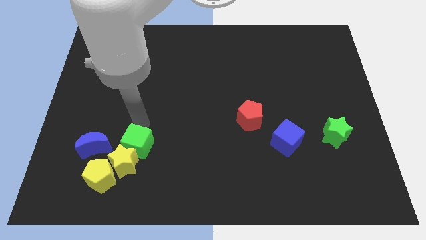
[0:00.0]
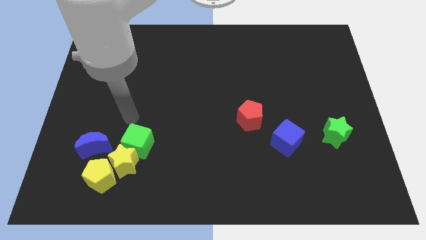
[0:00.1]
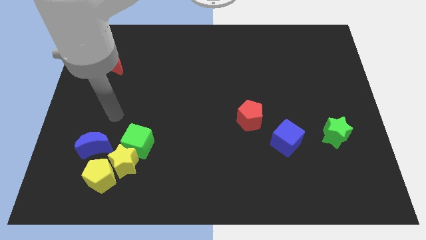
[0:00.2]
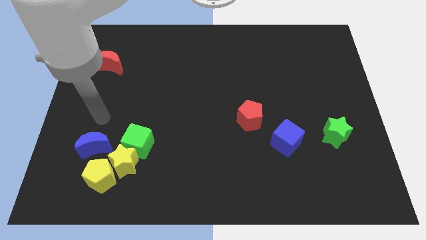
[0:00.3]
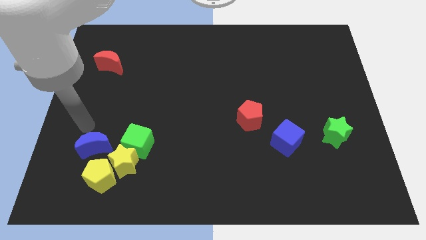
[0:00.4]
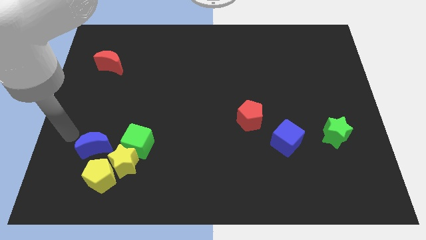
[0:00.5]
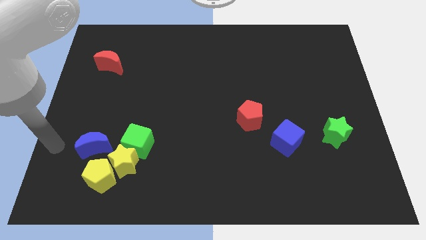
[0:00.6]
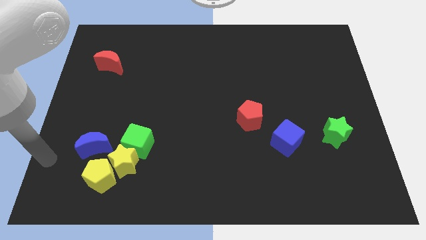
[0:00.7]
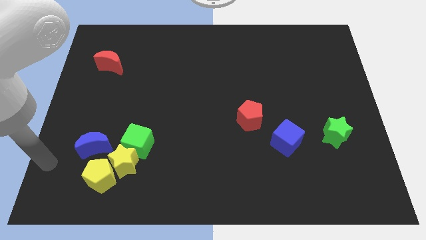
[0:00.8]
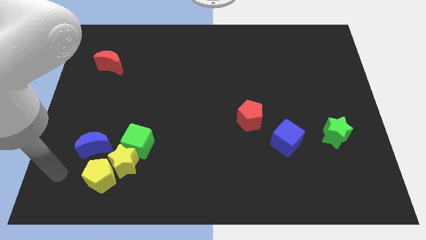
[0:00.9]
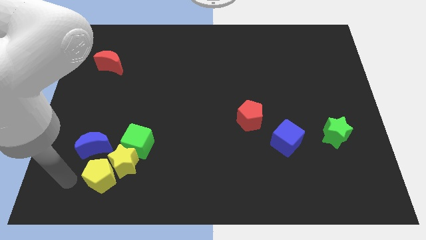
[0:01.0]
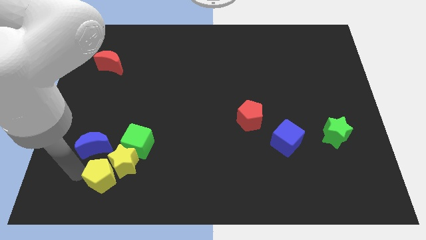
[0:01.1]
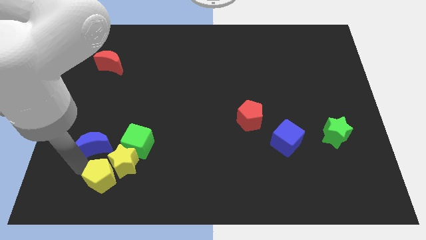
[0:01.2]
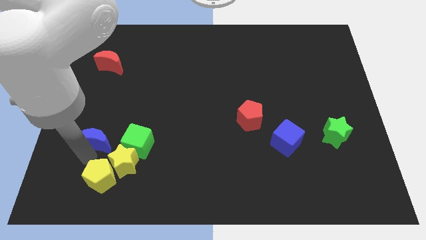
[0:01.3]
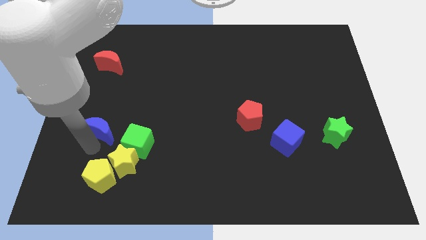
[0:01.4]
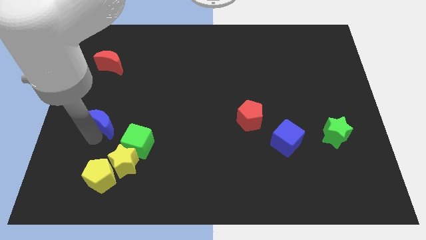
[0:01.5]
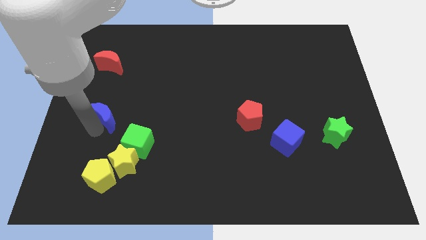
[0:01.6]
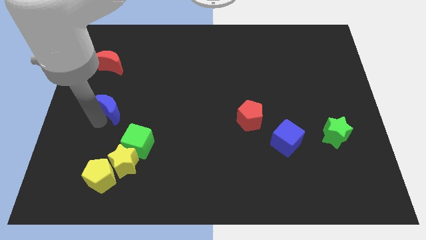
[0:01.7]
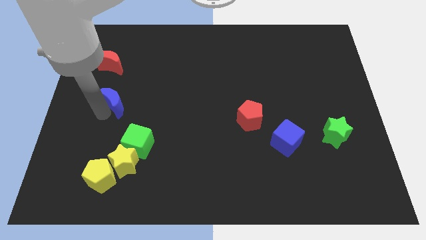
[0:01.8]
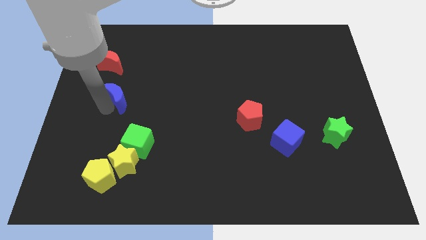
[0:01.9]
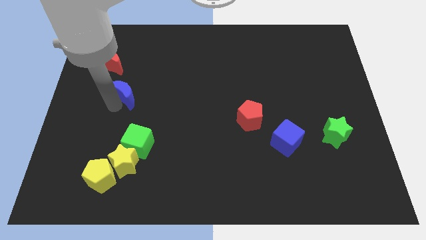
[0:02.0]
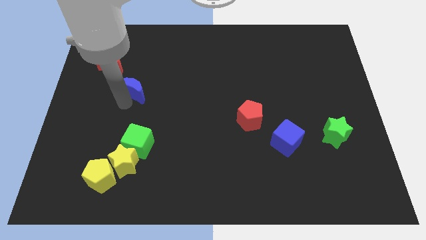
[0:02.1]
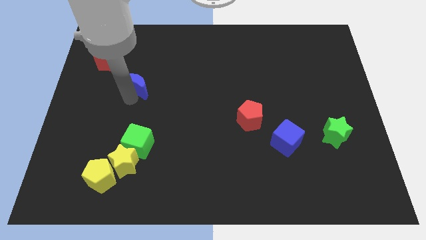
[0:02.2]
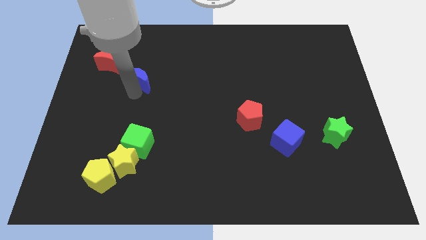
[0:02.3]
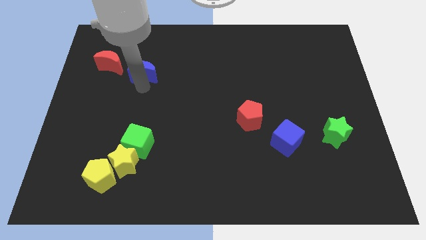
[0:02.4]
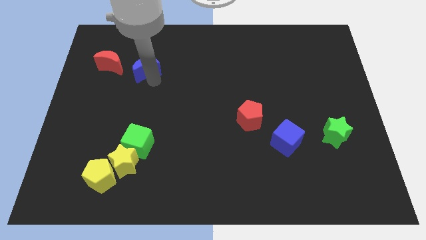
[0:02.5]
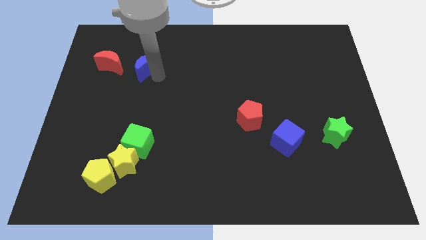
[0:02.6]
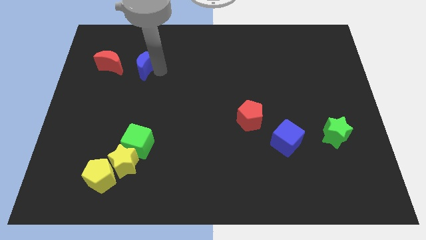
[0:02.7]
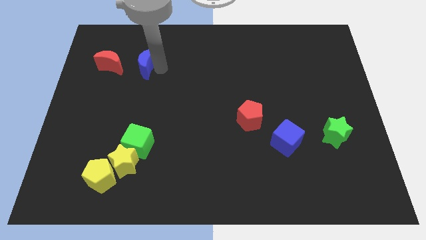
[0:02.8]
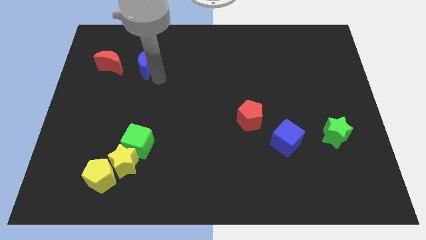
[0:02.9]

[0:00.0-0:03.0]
move the blue crescent to the right of the red crescent

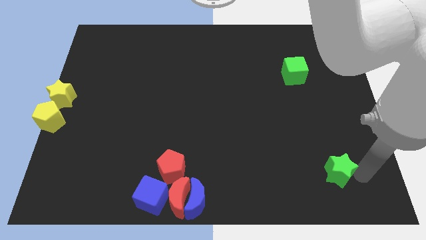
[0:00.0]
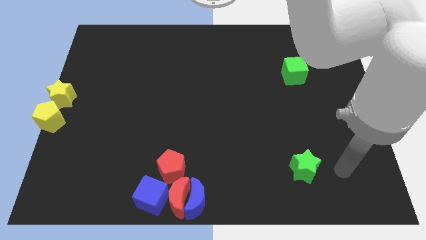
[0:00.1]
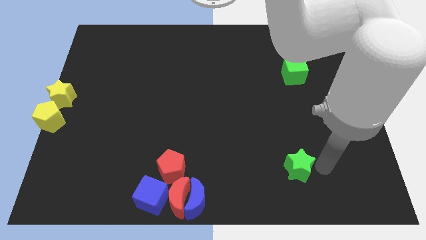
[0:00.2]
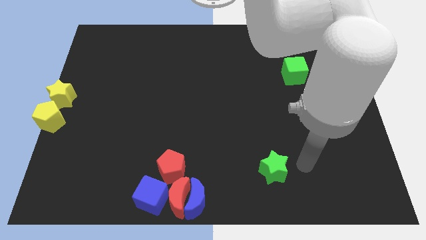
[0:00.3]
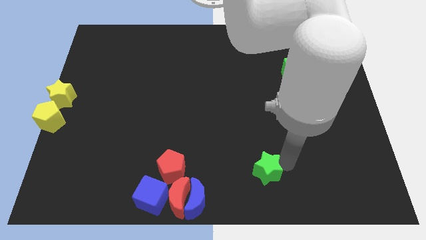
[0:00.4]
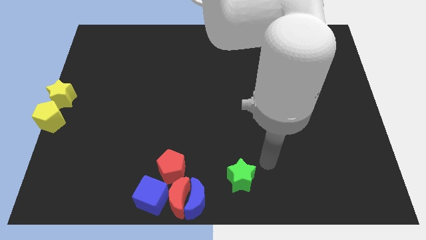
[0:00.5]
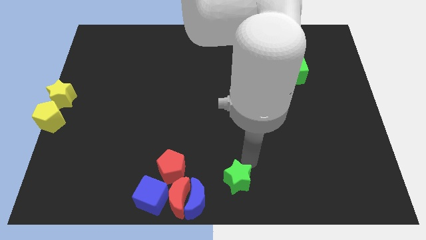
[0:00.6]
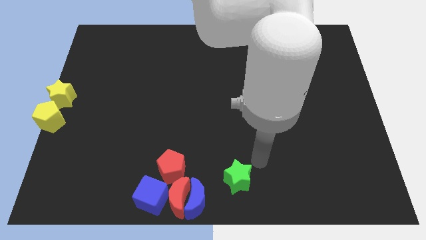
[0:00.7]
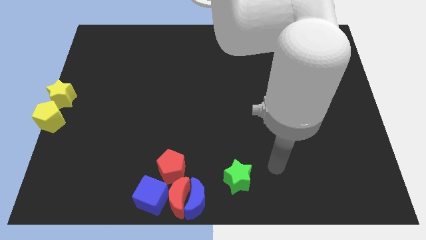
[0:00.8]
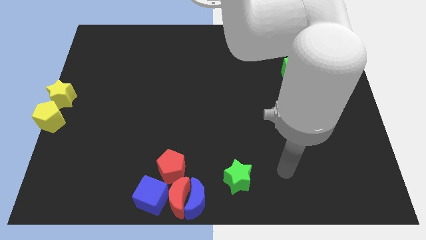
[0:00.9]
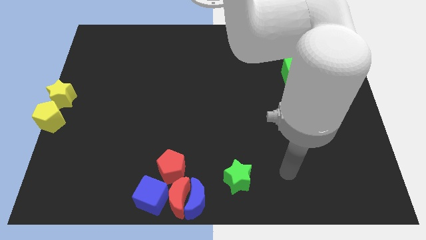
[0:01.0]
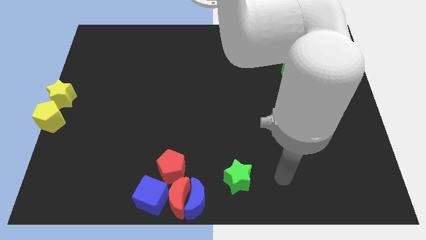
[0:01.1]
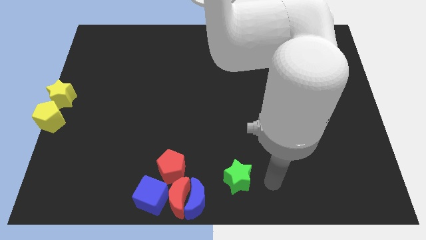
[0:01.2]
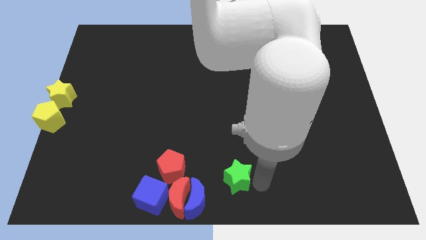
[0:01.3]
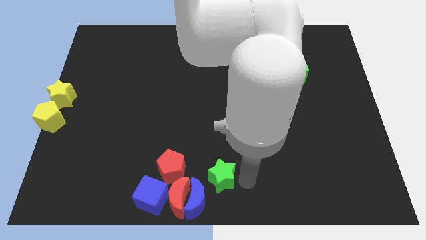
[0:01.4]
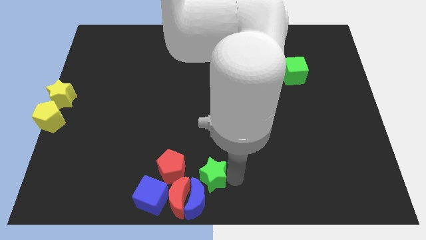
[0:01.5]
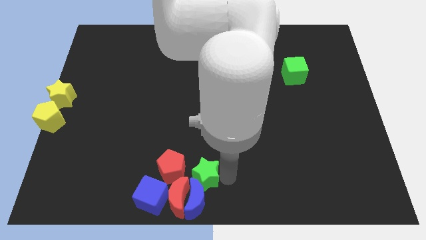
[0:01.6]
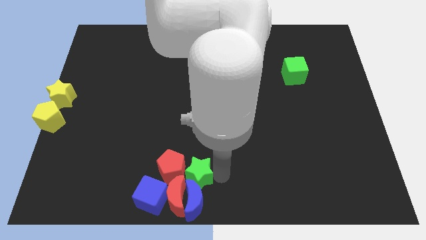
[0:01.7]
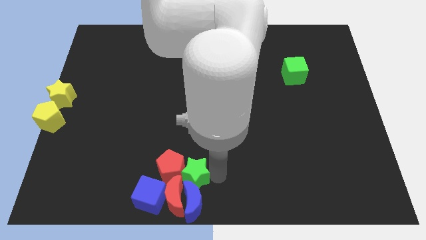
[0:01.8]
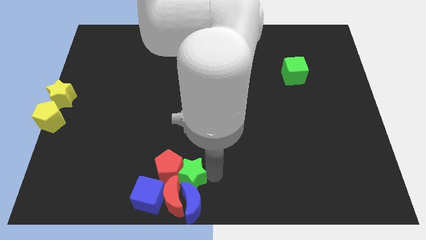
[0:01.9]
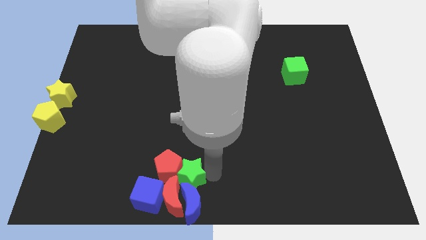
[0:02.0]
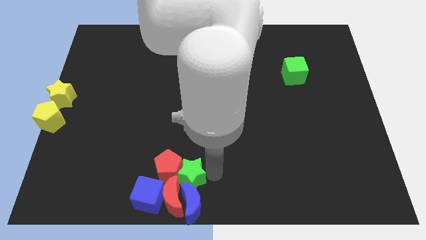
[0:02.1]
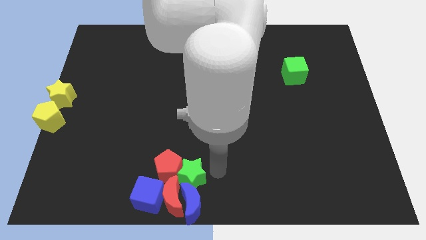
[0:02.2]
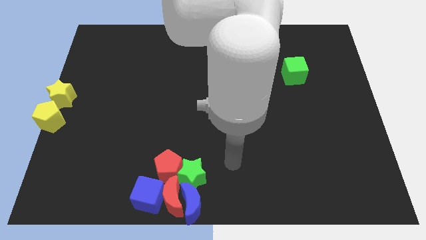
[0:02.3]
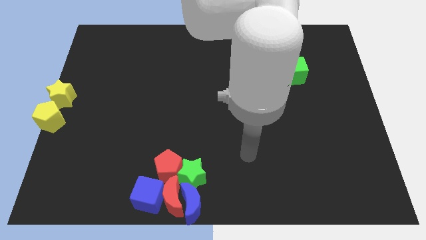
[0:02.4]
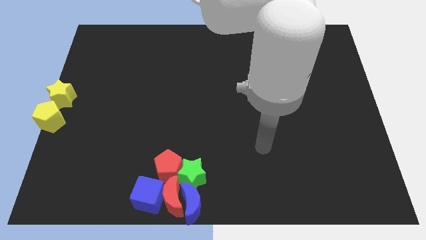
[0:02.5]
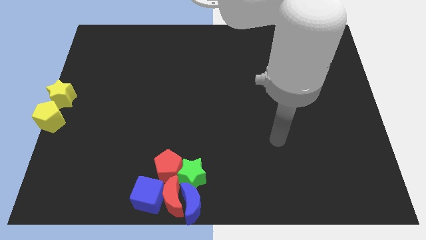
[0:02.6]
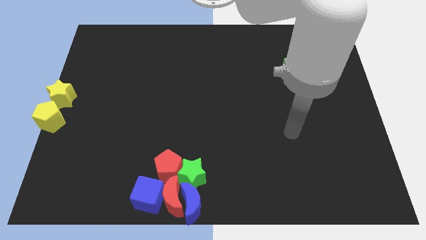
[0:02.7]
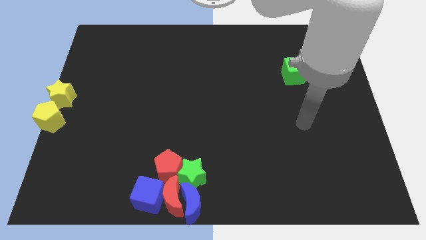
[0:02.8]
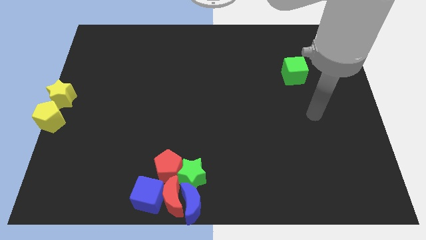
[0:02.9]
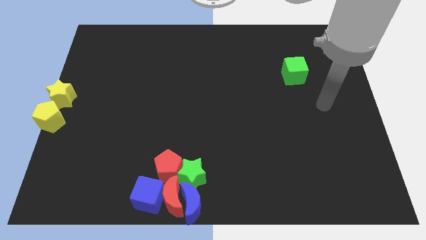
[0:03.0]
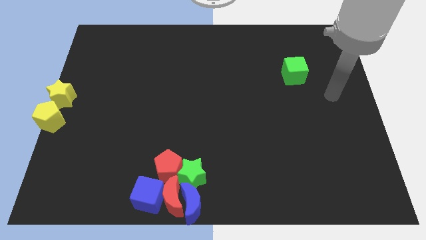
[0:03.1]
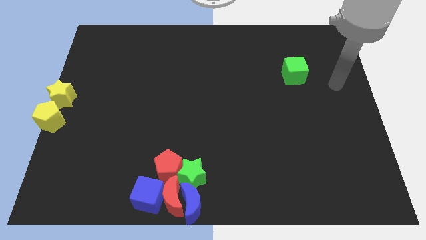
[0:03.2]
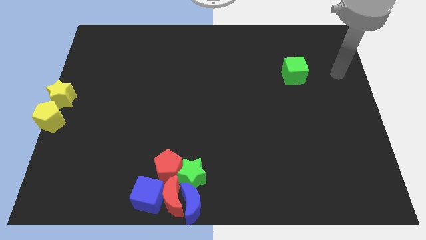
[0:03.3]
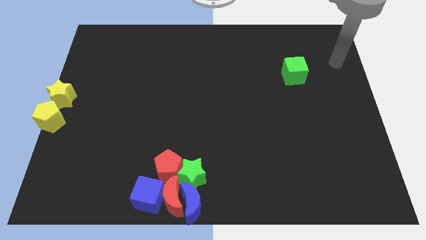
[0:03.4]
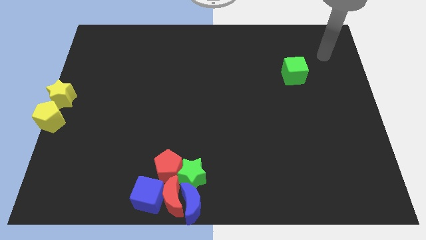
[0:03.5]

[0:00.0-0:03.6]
move the arm away from the green star

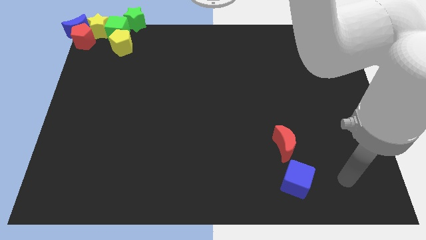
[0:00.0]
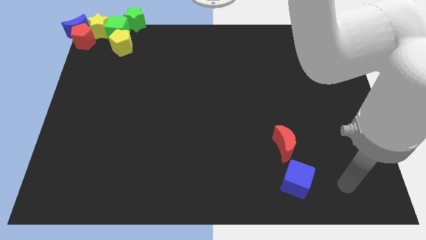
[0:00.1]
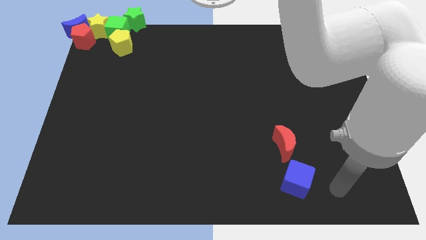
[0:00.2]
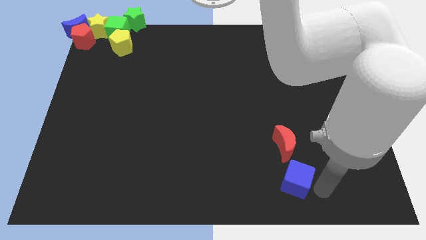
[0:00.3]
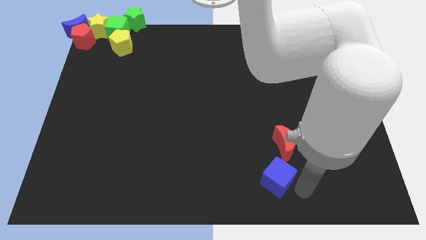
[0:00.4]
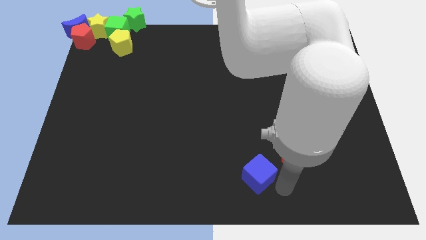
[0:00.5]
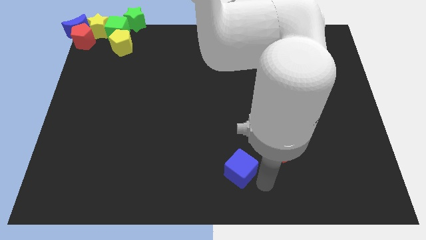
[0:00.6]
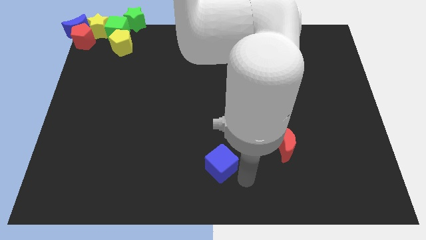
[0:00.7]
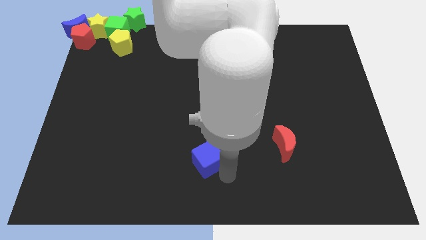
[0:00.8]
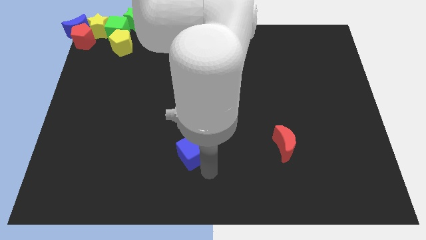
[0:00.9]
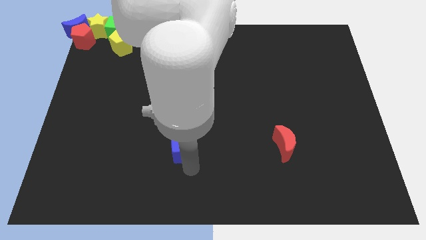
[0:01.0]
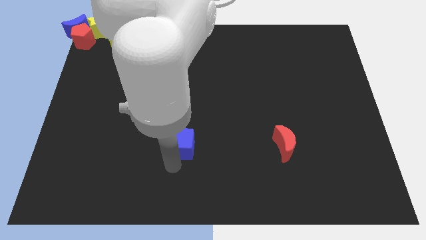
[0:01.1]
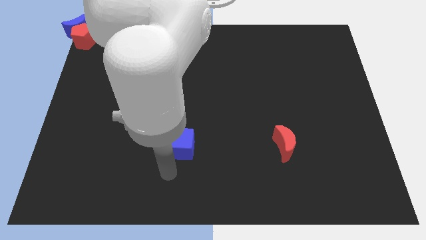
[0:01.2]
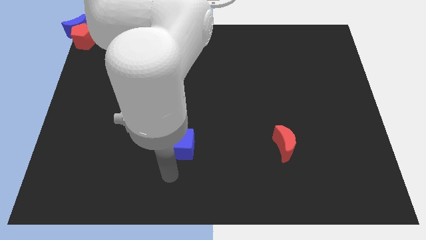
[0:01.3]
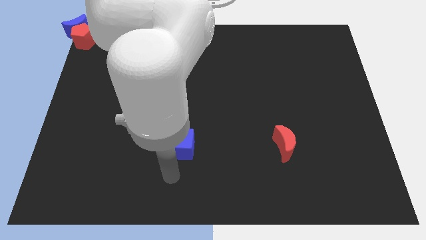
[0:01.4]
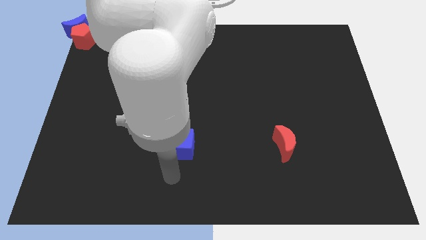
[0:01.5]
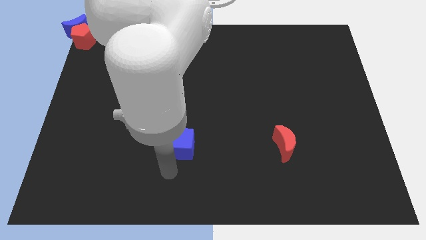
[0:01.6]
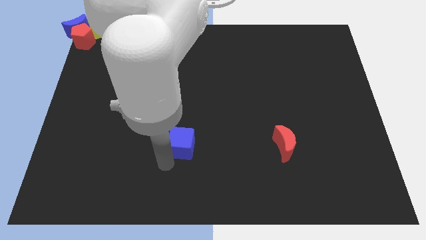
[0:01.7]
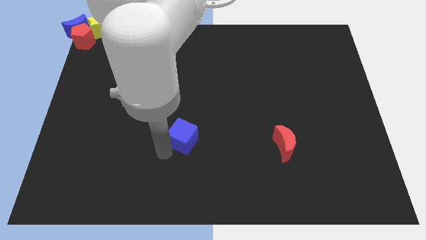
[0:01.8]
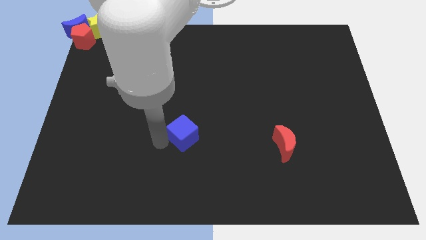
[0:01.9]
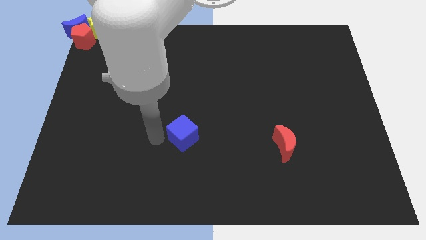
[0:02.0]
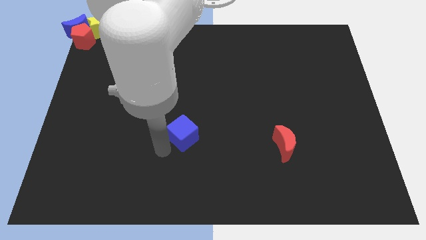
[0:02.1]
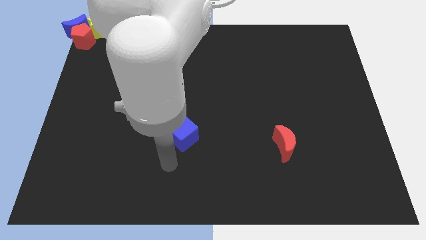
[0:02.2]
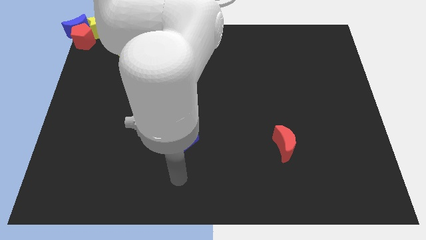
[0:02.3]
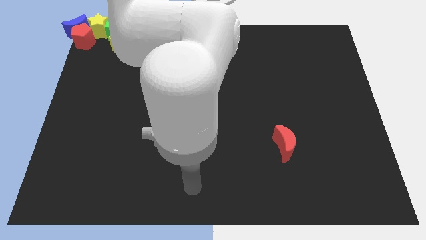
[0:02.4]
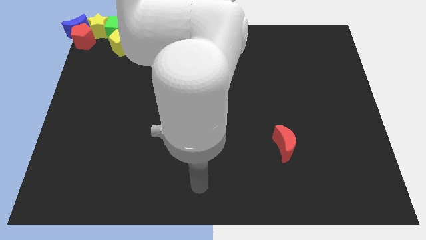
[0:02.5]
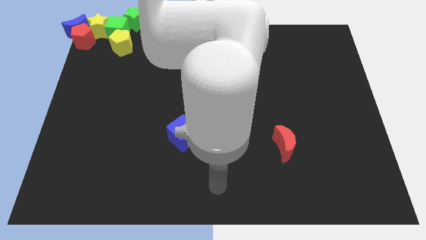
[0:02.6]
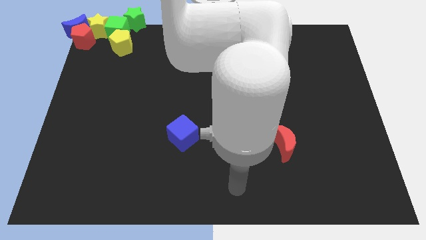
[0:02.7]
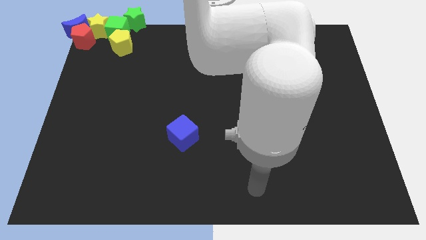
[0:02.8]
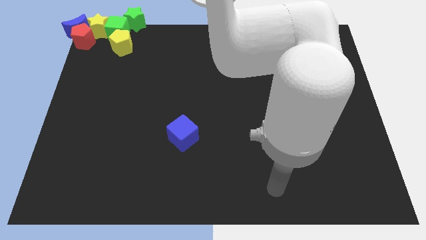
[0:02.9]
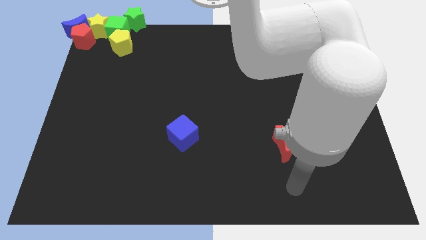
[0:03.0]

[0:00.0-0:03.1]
push the blue cube towards the left side of the board
